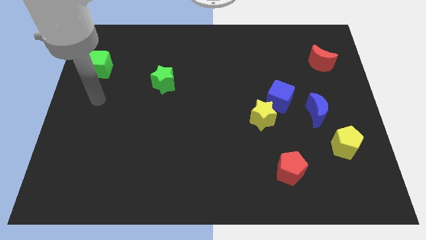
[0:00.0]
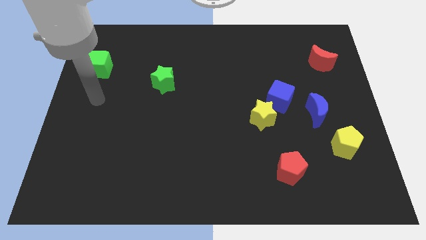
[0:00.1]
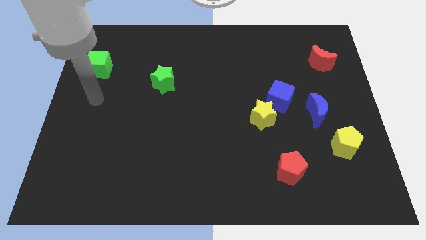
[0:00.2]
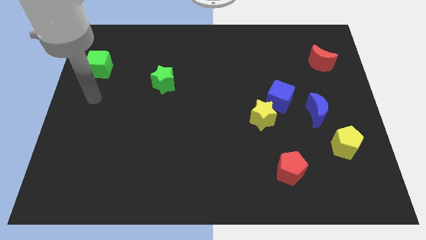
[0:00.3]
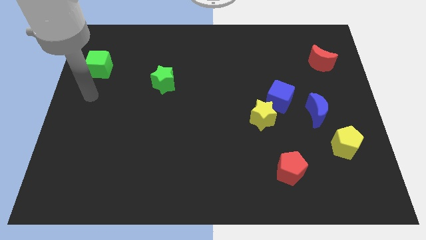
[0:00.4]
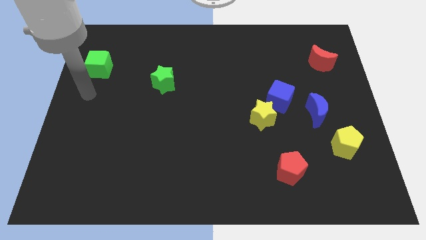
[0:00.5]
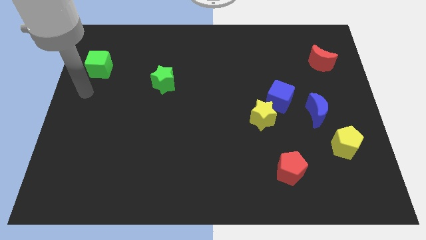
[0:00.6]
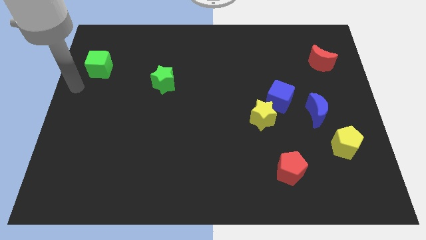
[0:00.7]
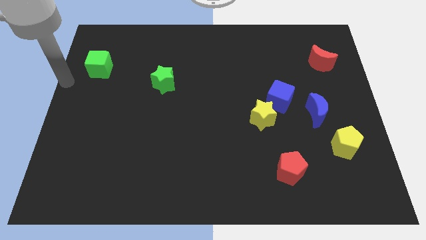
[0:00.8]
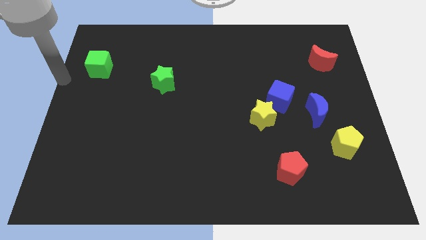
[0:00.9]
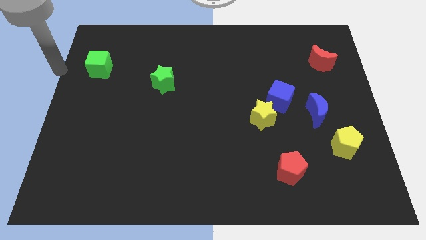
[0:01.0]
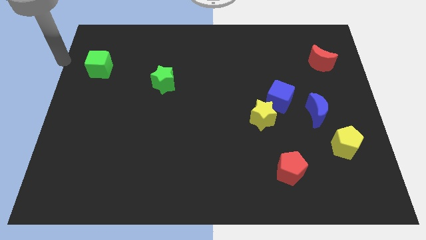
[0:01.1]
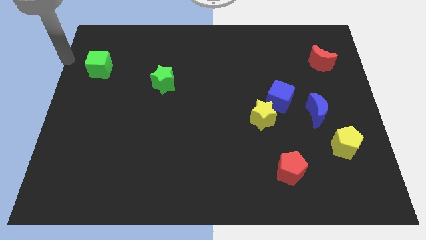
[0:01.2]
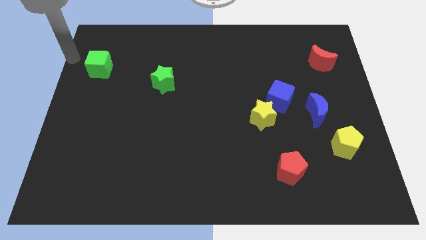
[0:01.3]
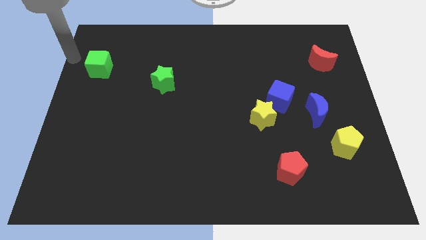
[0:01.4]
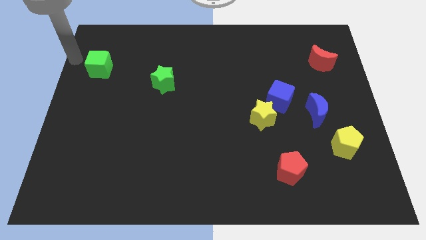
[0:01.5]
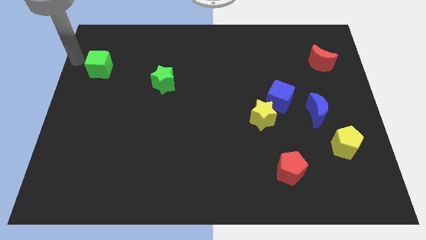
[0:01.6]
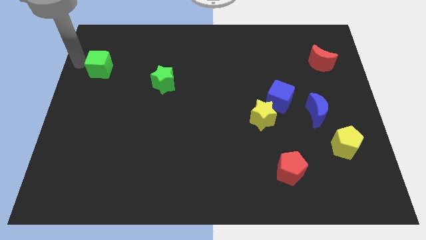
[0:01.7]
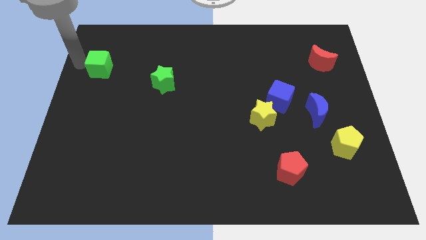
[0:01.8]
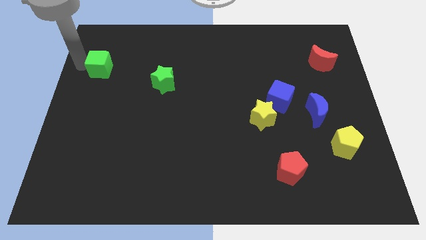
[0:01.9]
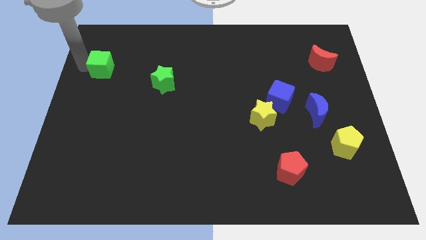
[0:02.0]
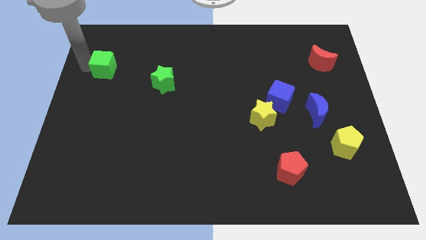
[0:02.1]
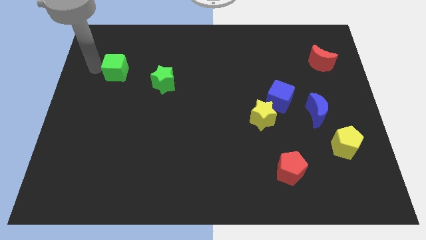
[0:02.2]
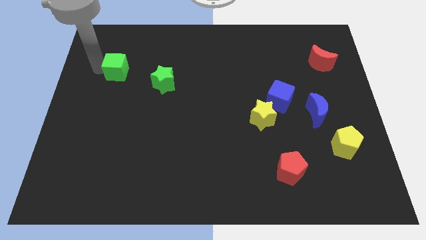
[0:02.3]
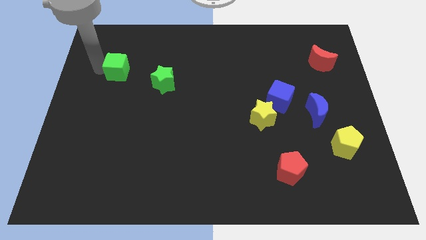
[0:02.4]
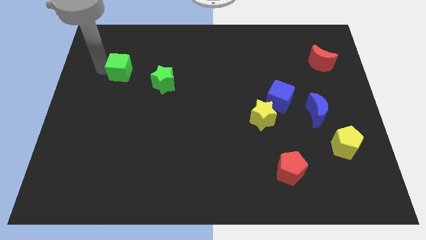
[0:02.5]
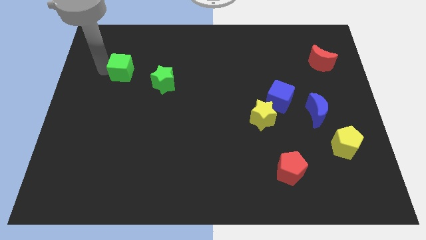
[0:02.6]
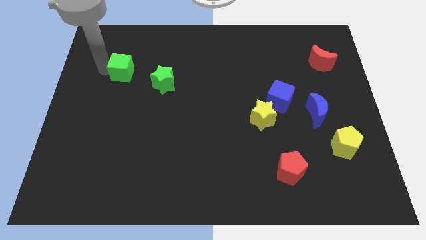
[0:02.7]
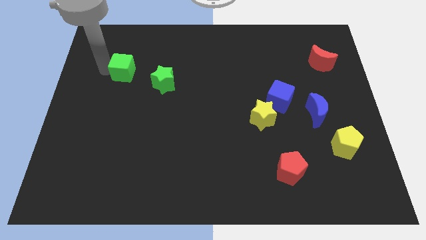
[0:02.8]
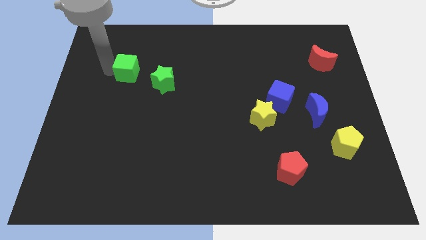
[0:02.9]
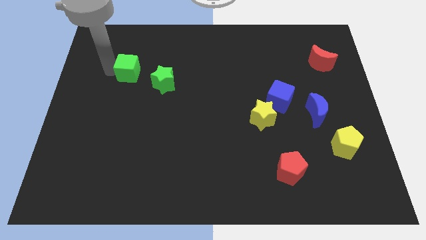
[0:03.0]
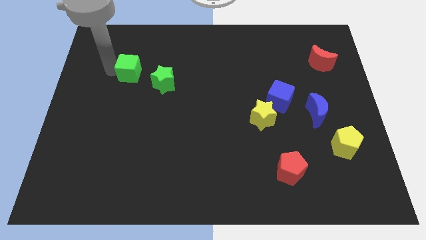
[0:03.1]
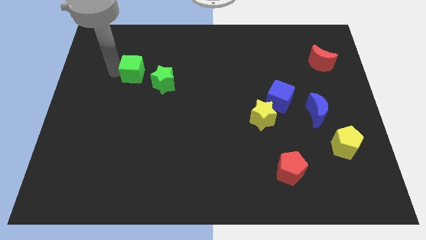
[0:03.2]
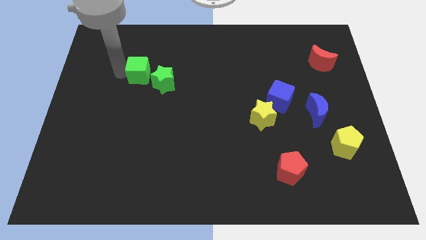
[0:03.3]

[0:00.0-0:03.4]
move green cube towards green star

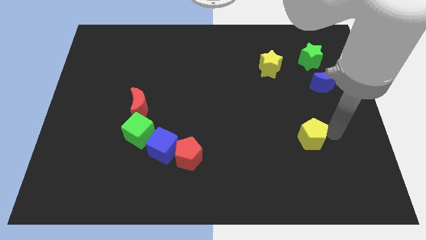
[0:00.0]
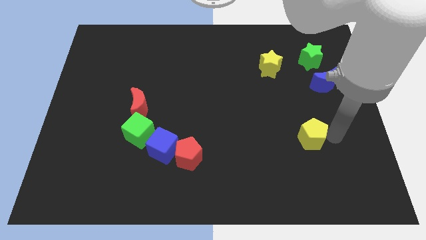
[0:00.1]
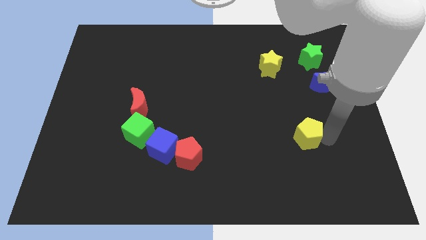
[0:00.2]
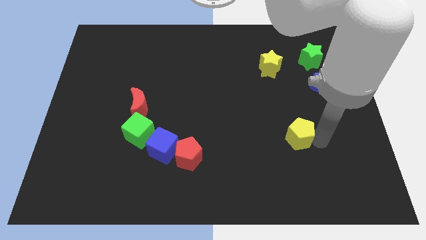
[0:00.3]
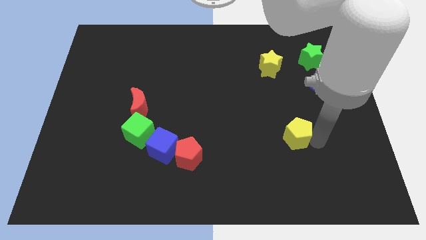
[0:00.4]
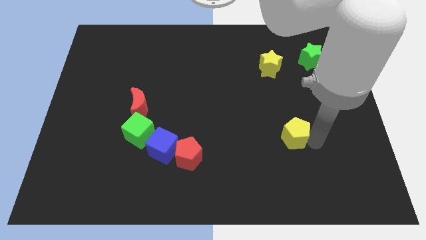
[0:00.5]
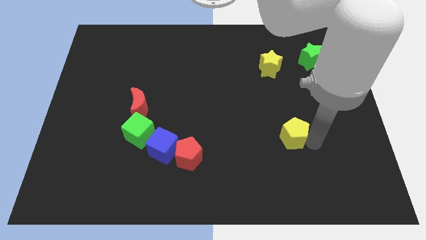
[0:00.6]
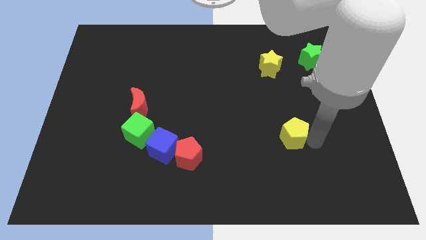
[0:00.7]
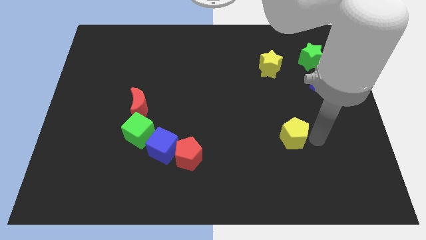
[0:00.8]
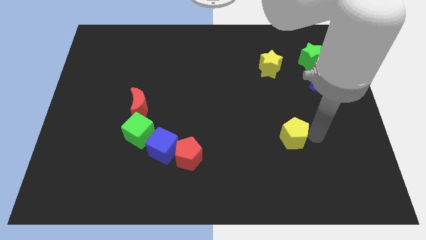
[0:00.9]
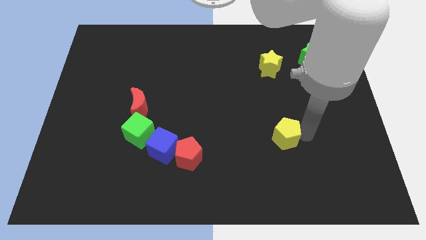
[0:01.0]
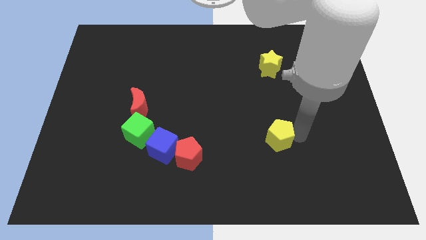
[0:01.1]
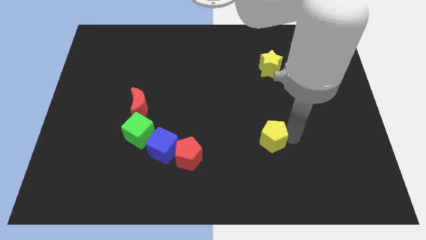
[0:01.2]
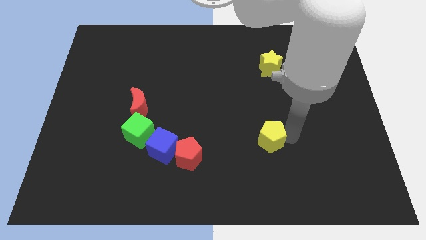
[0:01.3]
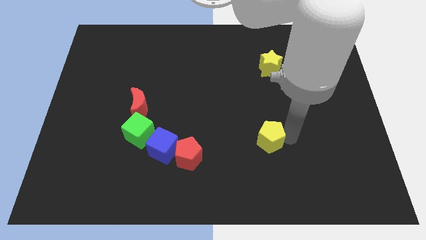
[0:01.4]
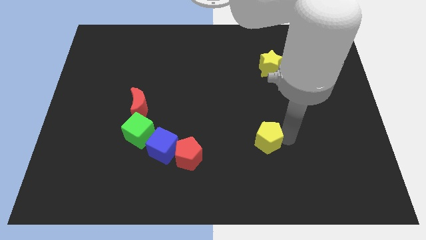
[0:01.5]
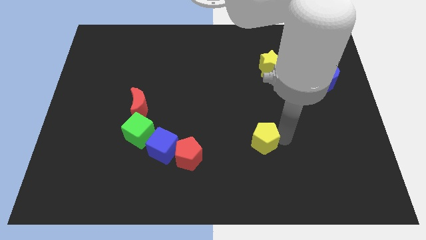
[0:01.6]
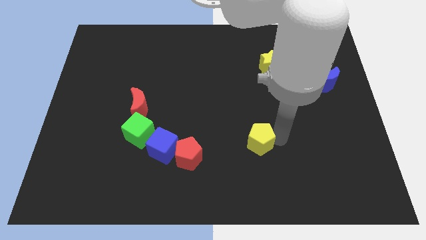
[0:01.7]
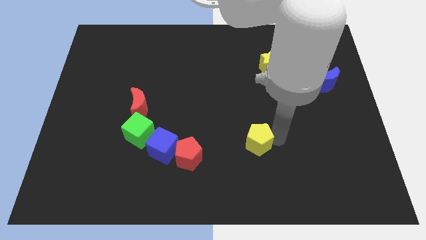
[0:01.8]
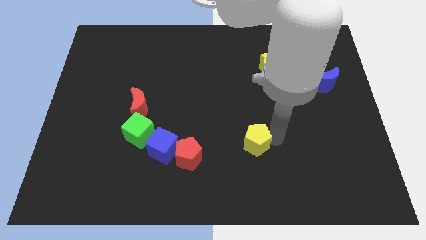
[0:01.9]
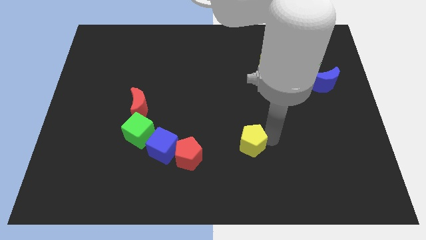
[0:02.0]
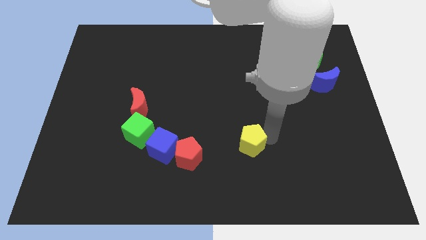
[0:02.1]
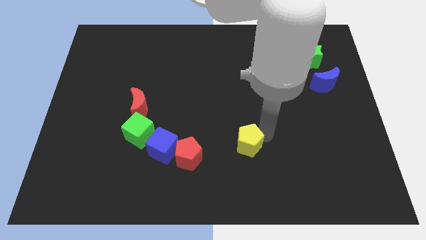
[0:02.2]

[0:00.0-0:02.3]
move the yellow pentagon towards the red pentagon

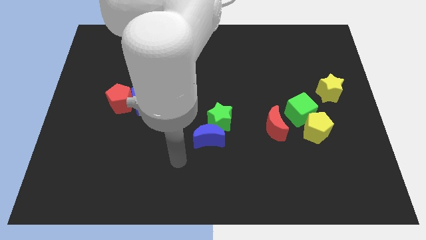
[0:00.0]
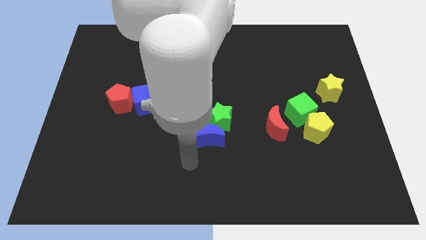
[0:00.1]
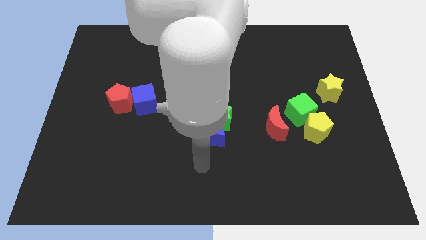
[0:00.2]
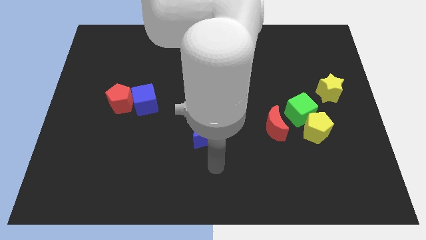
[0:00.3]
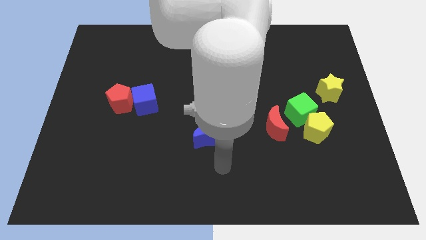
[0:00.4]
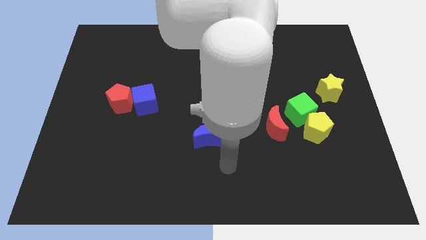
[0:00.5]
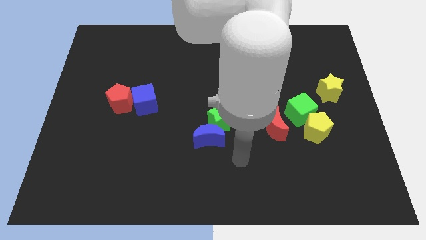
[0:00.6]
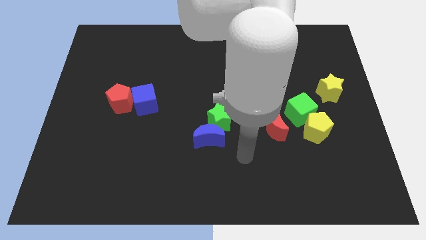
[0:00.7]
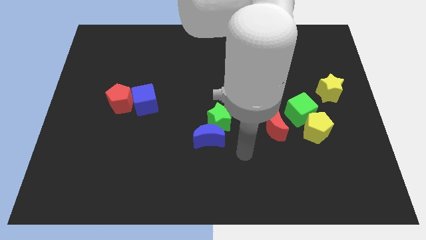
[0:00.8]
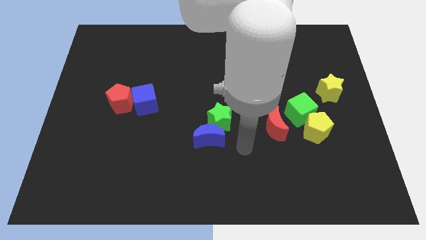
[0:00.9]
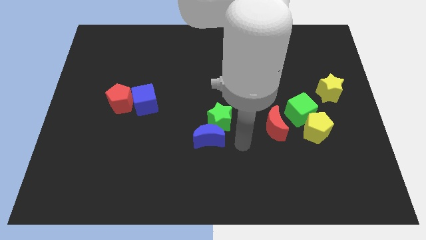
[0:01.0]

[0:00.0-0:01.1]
slide your arm to right of blue moon

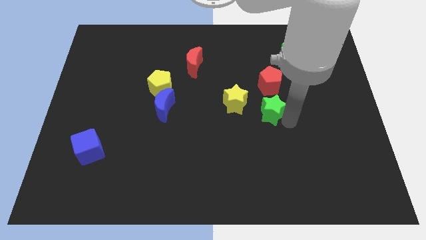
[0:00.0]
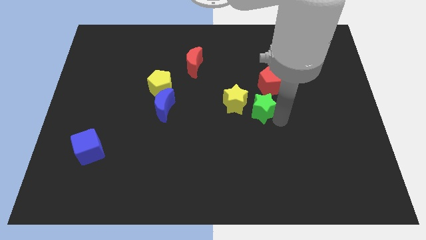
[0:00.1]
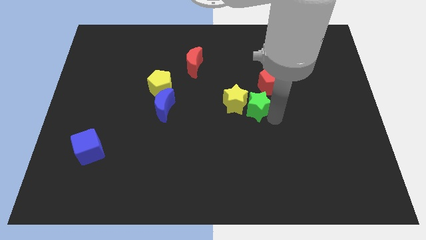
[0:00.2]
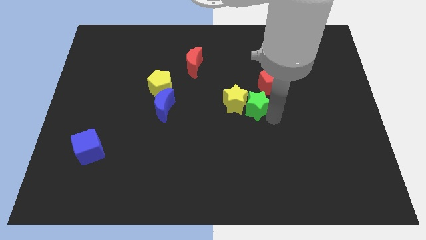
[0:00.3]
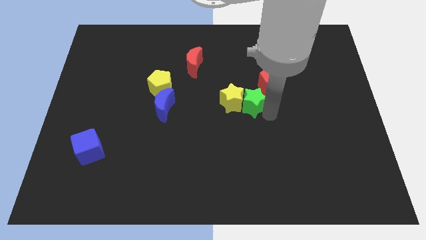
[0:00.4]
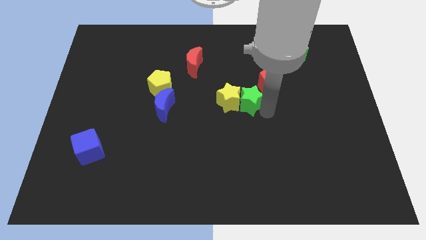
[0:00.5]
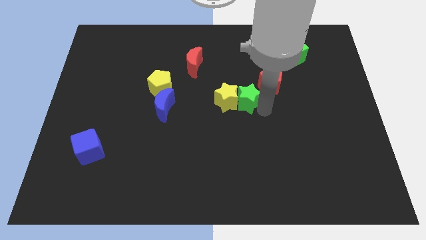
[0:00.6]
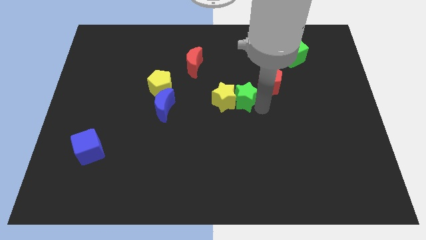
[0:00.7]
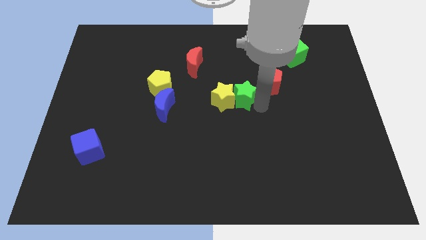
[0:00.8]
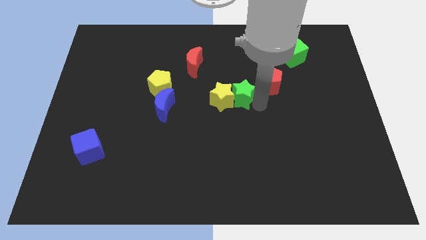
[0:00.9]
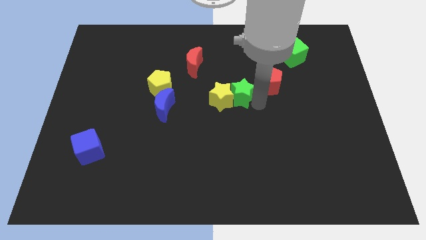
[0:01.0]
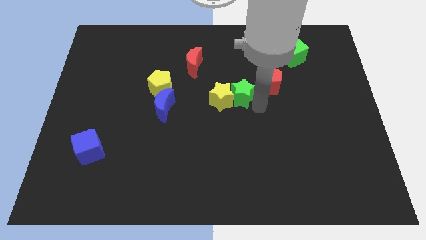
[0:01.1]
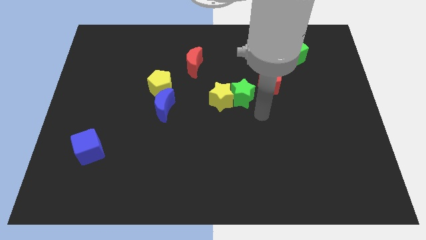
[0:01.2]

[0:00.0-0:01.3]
put the green star close to the right side of the yellow star

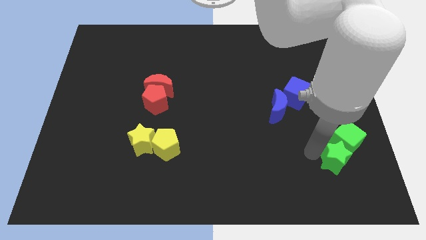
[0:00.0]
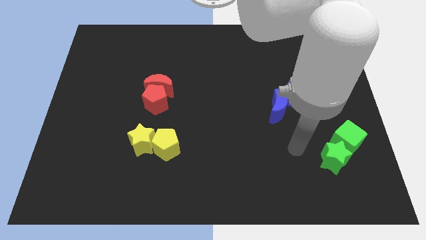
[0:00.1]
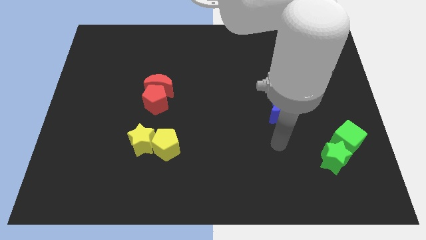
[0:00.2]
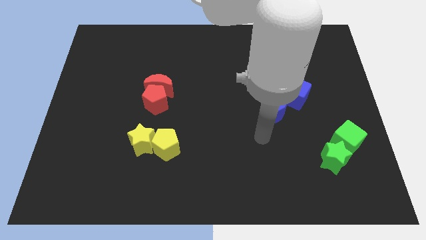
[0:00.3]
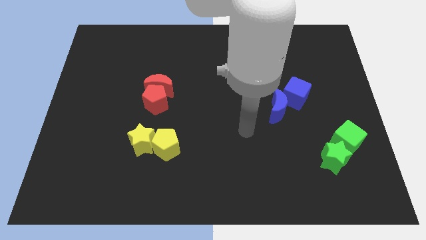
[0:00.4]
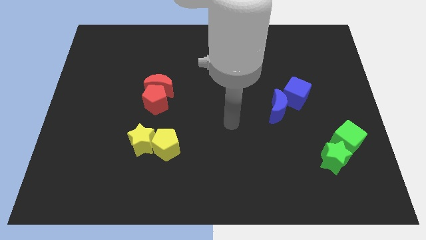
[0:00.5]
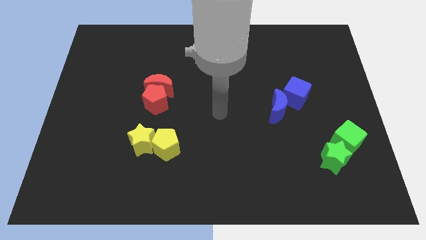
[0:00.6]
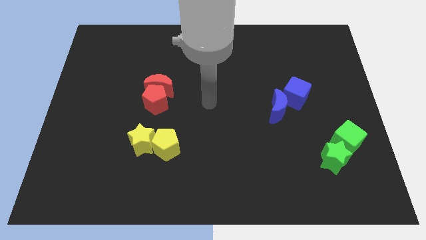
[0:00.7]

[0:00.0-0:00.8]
move your arm away from the green star
